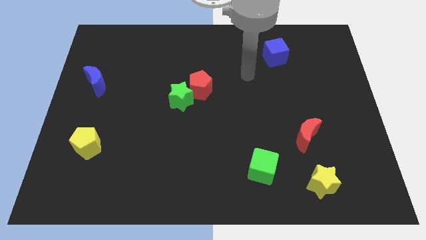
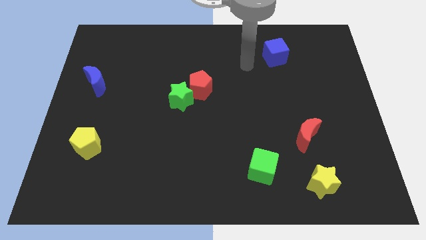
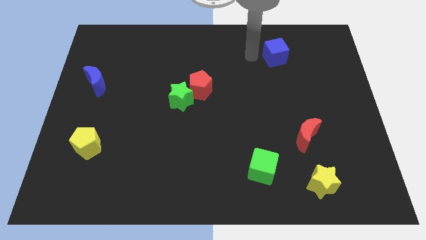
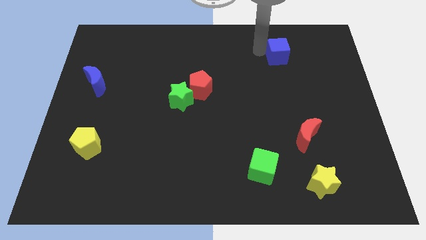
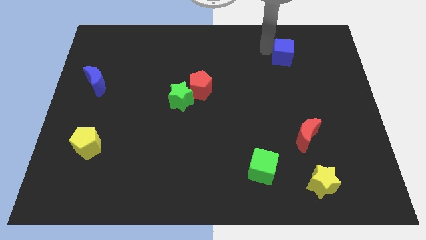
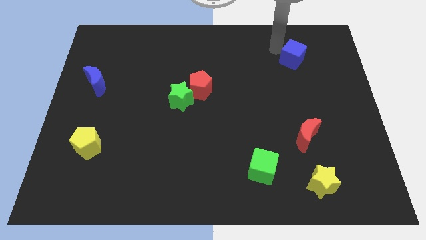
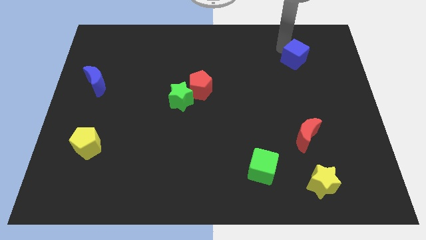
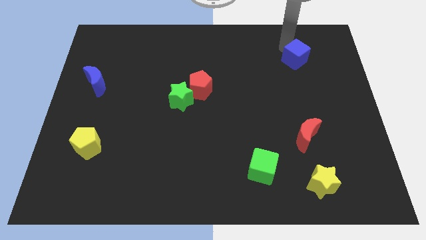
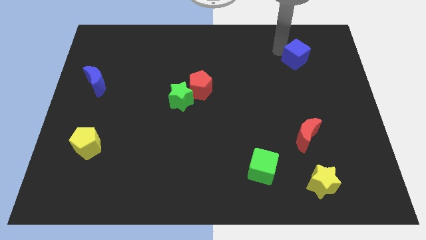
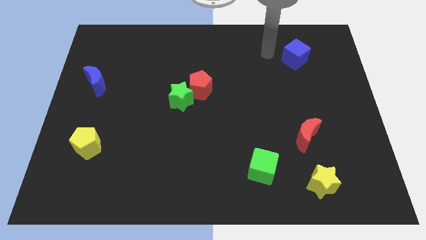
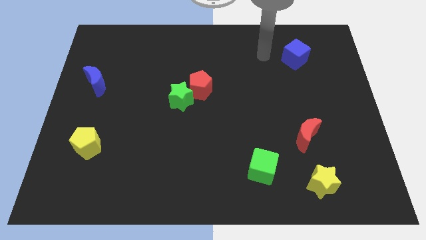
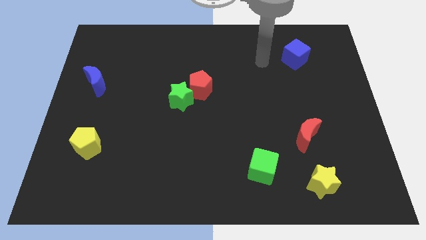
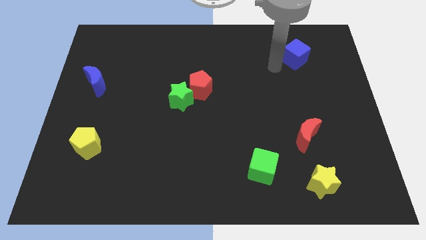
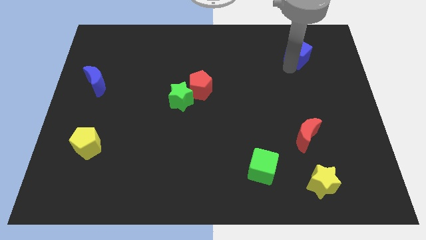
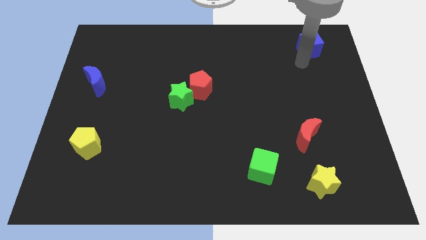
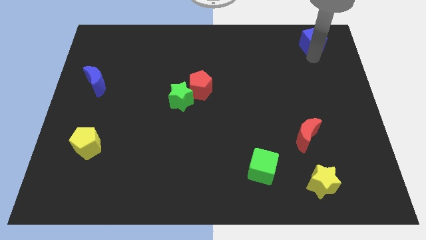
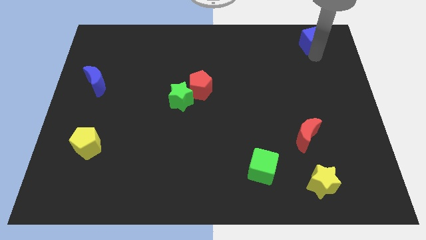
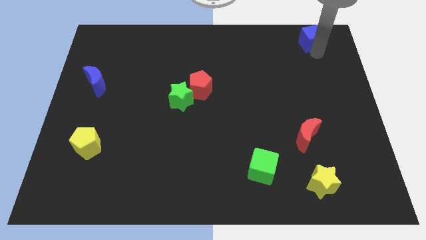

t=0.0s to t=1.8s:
slide the blue cube towards the top right corner

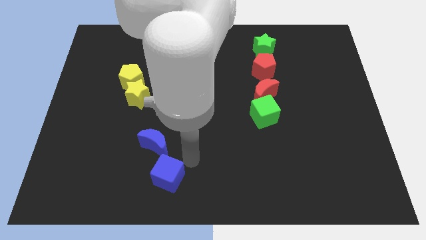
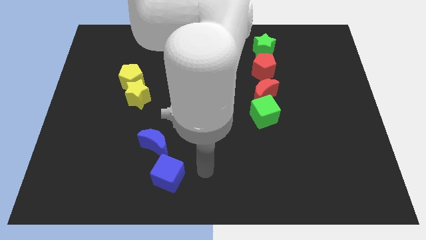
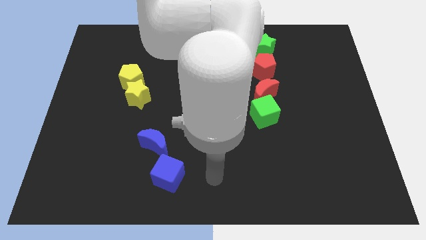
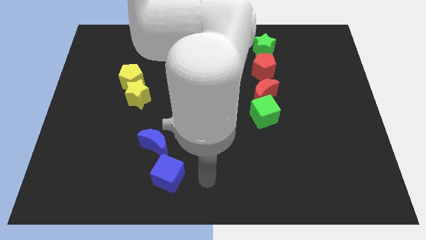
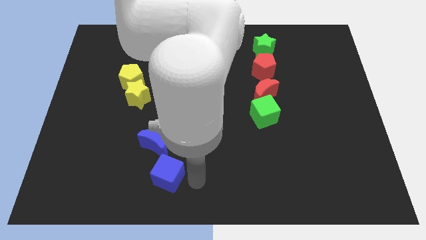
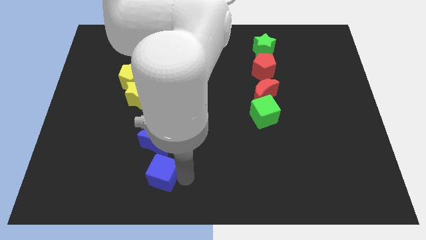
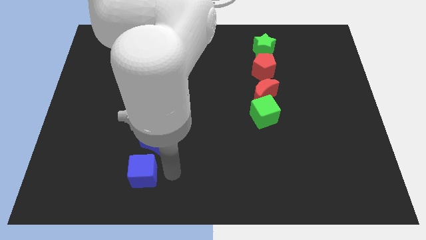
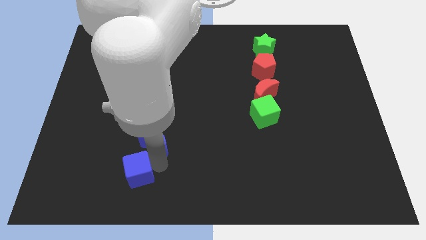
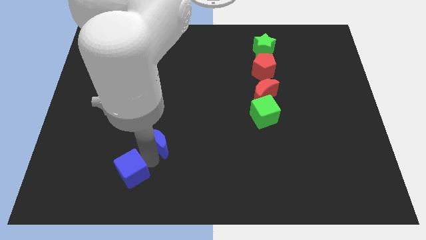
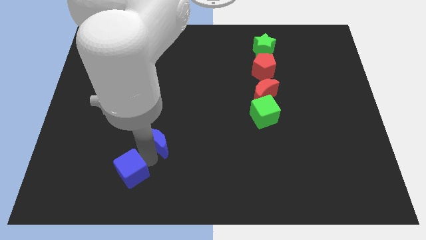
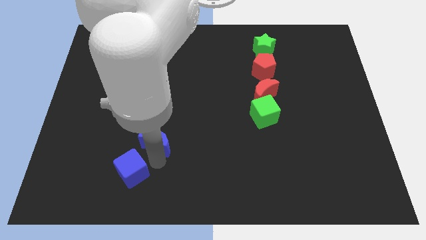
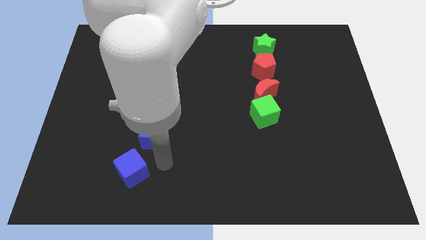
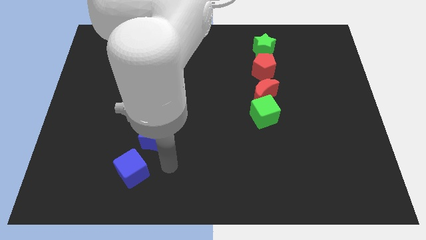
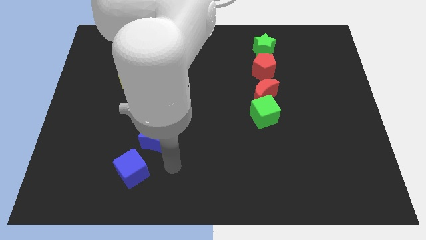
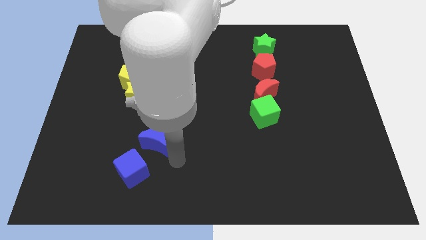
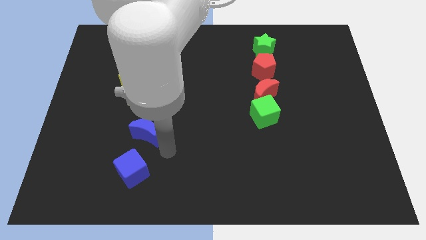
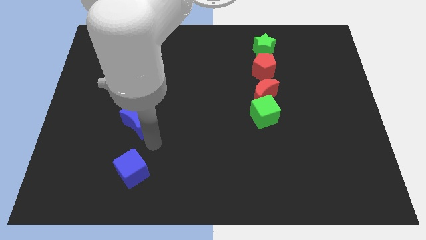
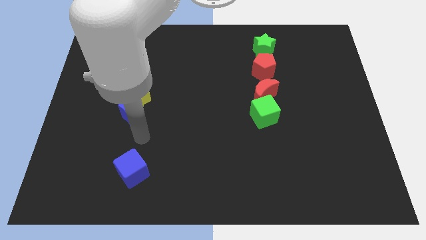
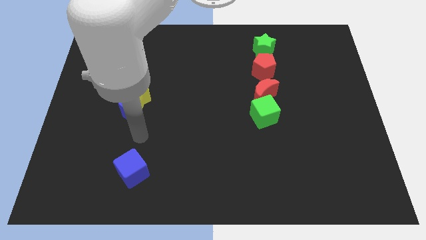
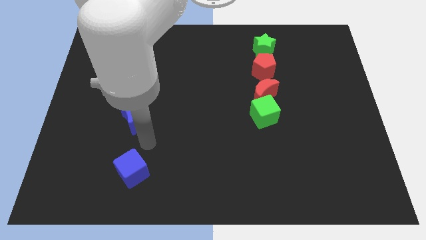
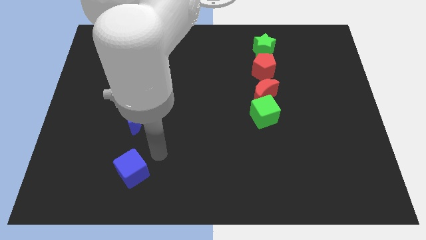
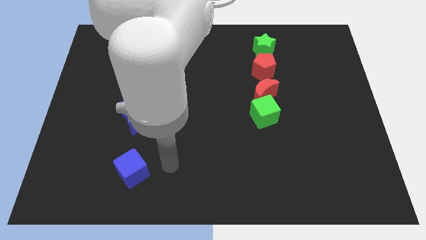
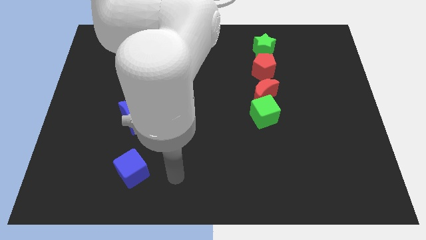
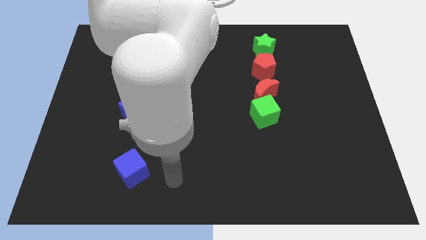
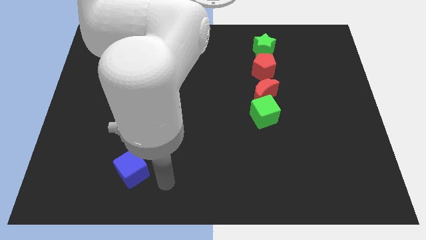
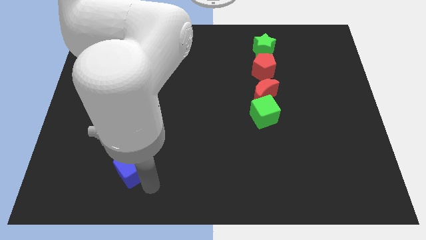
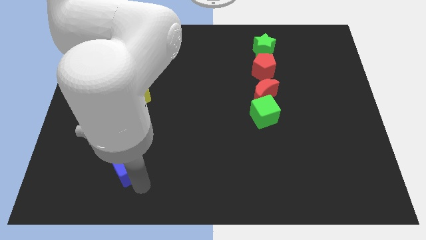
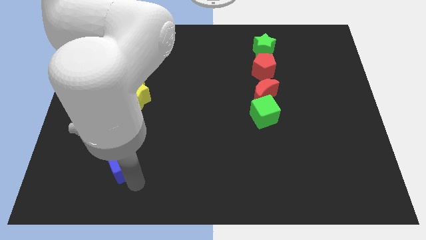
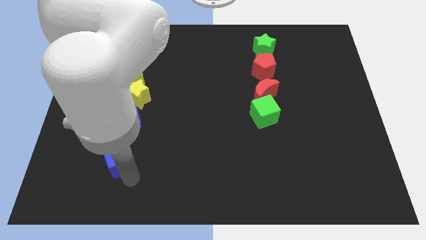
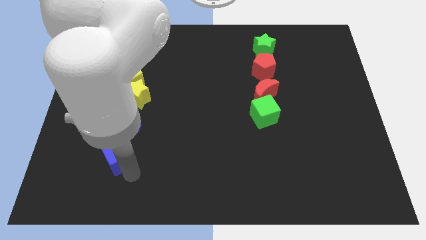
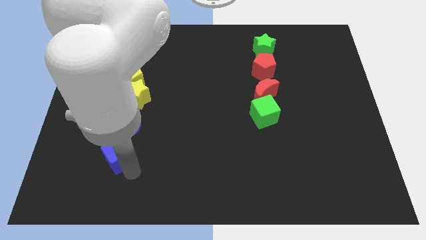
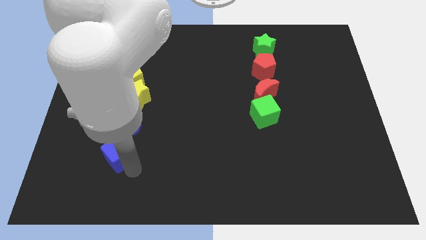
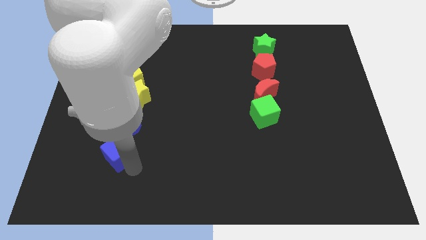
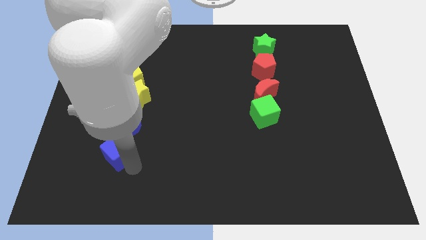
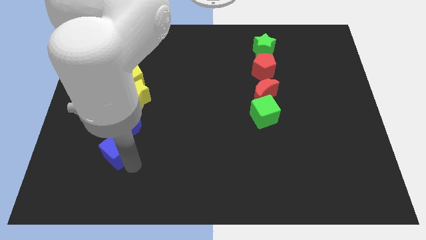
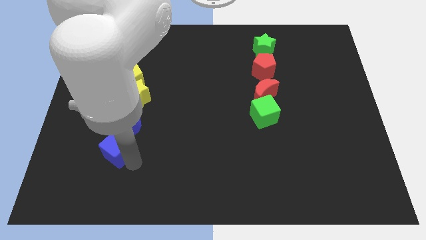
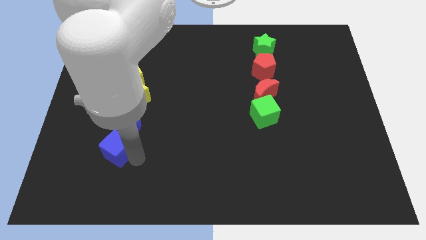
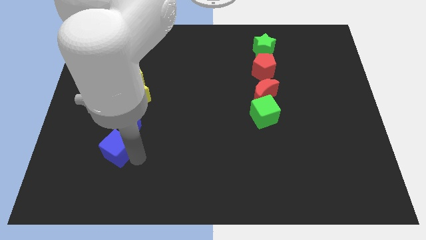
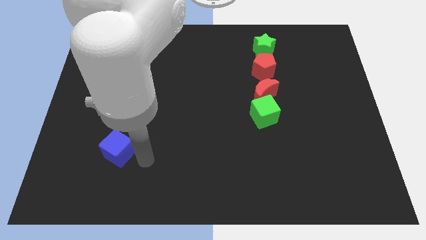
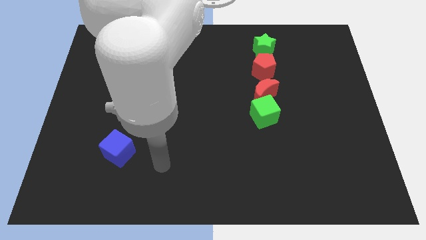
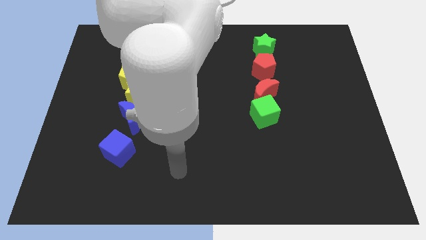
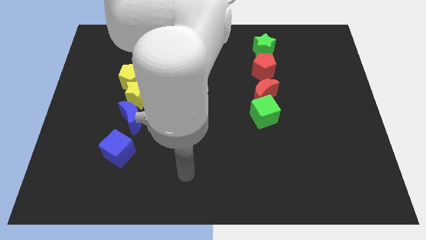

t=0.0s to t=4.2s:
move the blue moon and blue cube below the yellow blocks

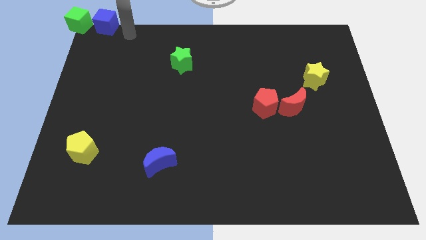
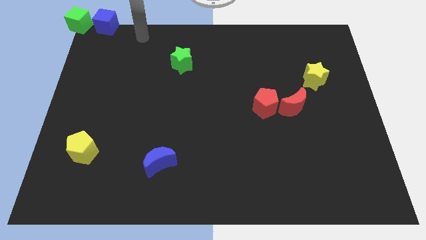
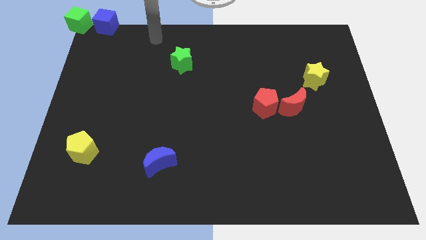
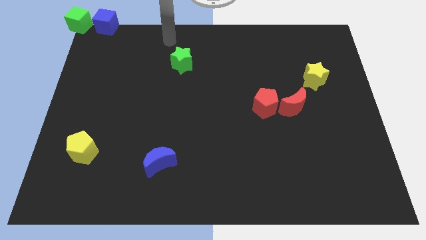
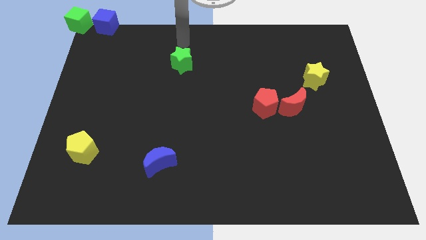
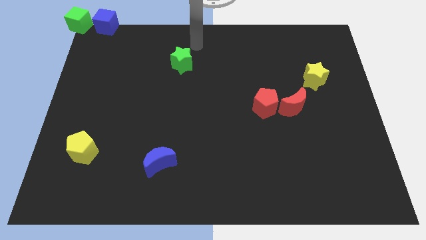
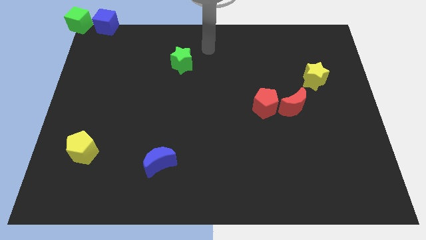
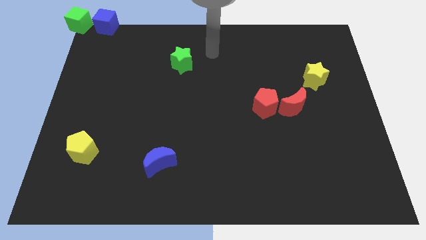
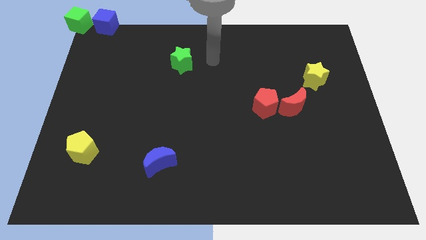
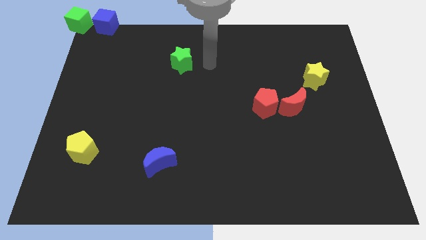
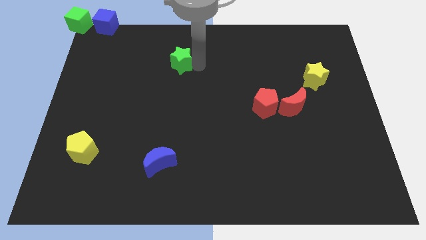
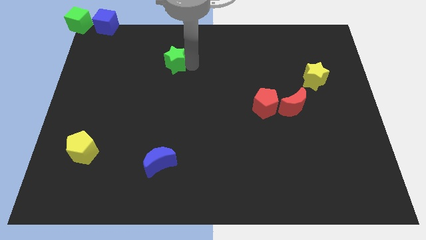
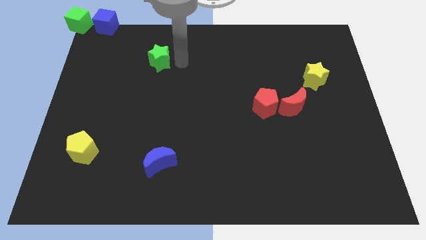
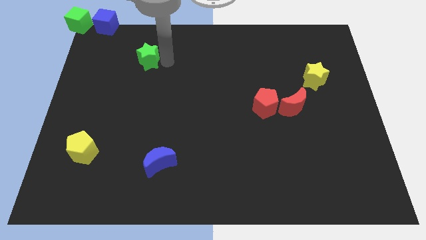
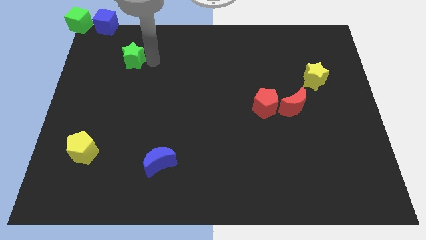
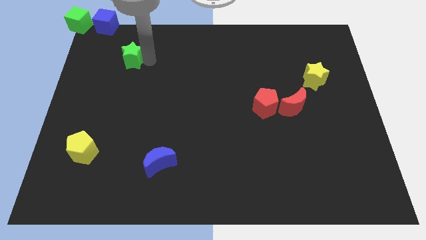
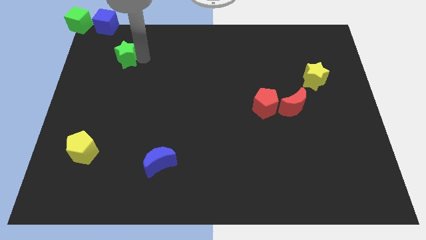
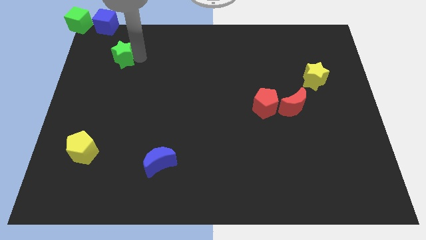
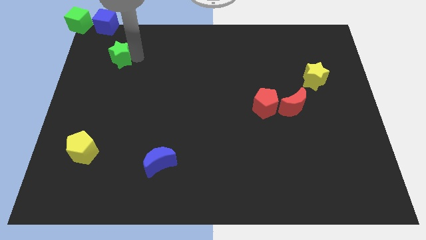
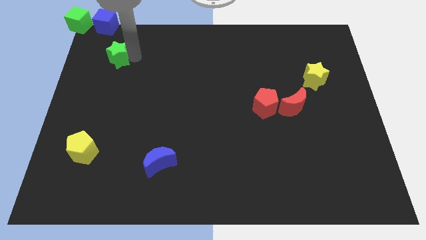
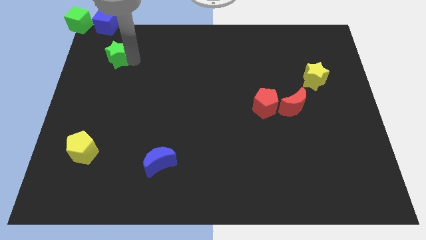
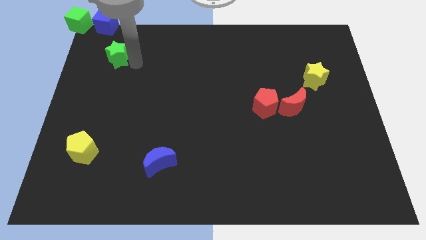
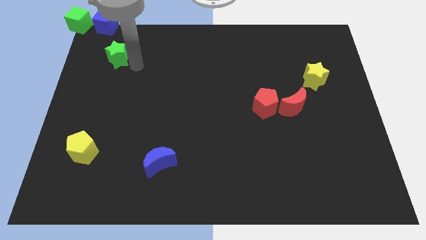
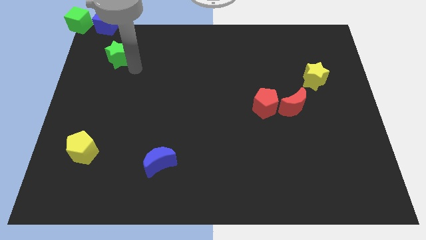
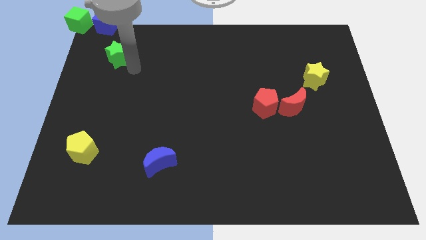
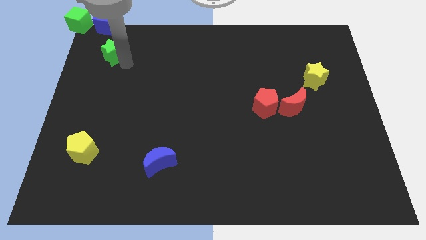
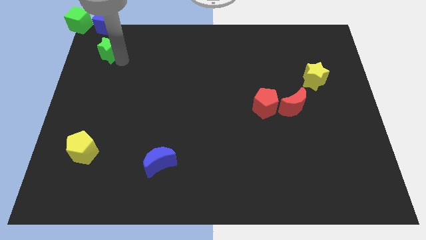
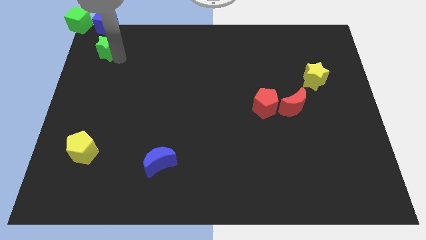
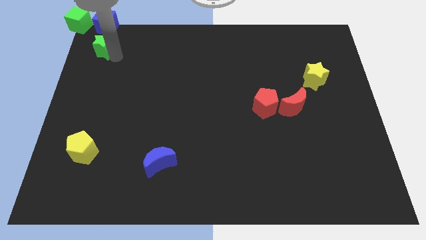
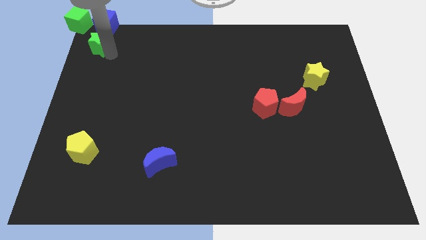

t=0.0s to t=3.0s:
place the green star below the blue cube
